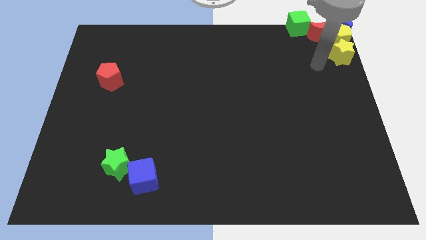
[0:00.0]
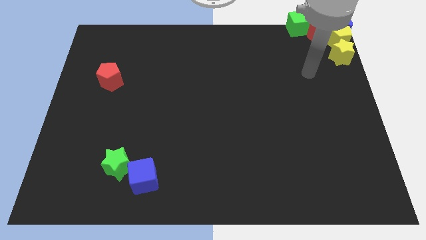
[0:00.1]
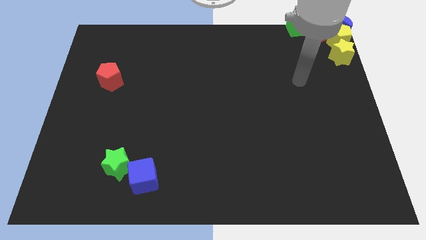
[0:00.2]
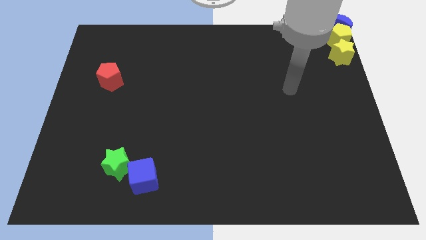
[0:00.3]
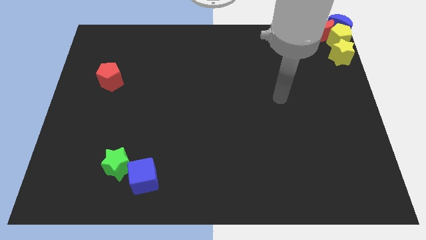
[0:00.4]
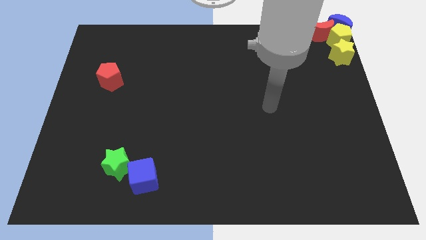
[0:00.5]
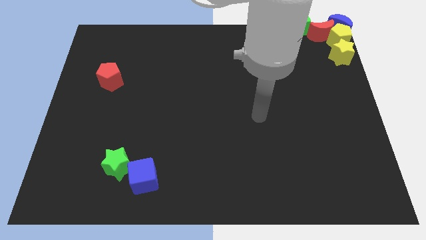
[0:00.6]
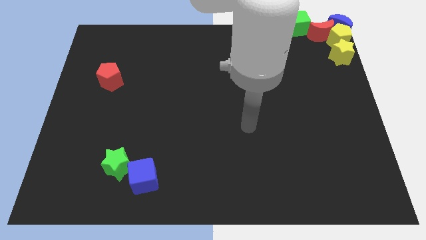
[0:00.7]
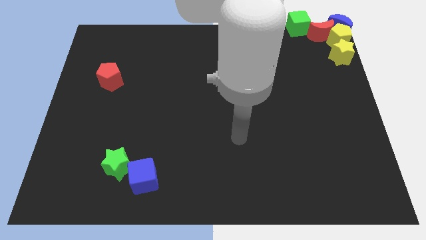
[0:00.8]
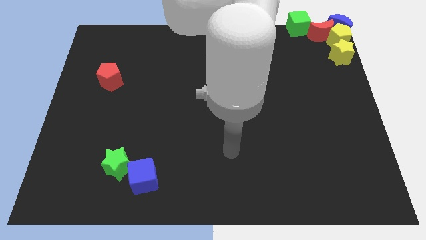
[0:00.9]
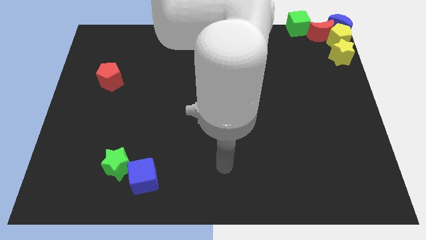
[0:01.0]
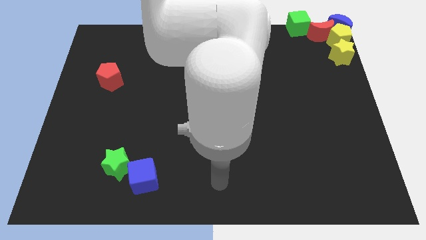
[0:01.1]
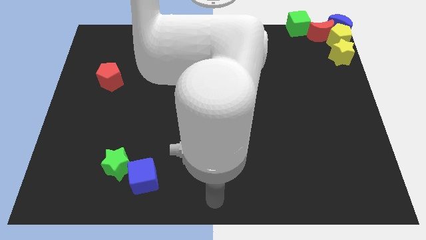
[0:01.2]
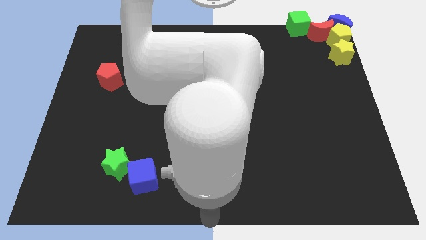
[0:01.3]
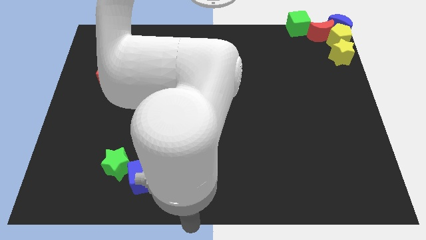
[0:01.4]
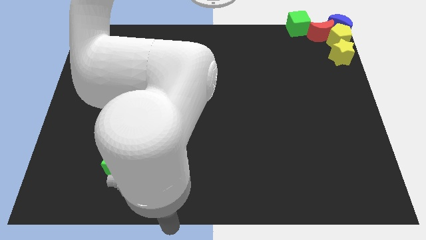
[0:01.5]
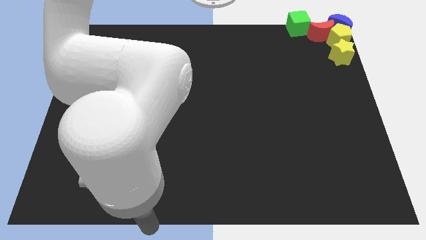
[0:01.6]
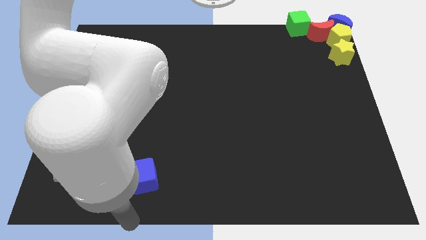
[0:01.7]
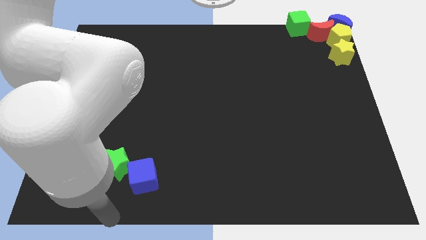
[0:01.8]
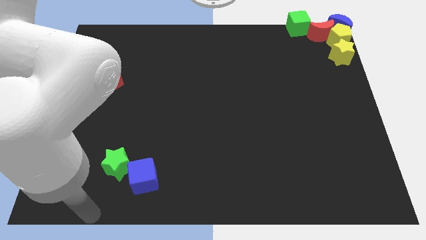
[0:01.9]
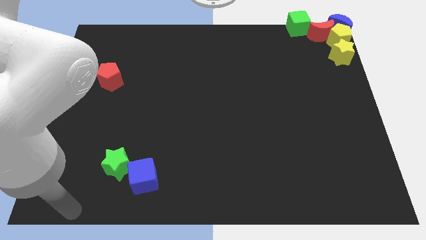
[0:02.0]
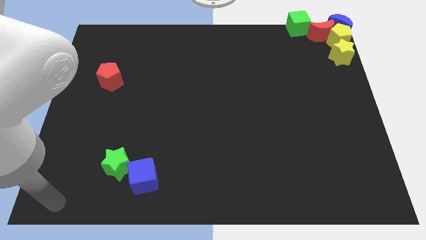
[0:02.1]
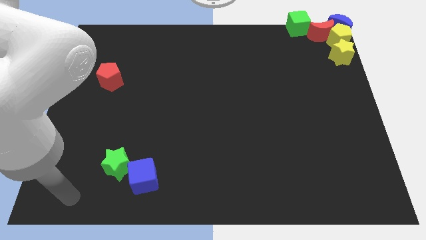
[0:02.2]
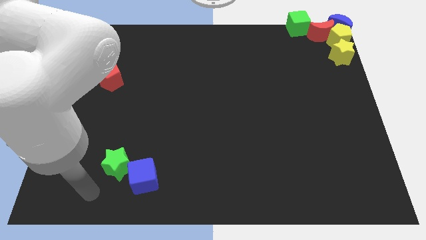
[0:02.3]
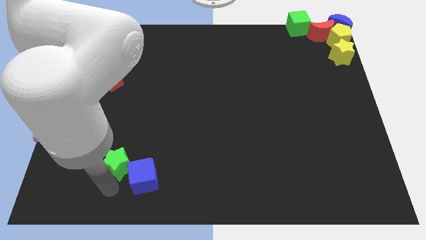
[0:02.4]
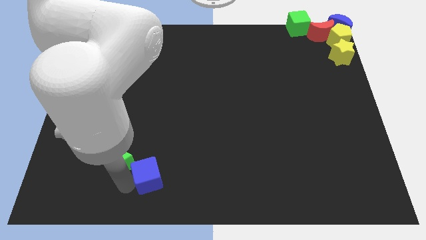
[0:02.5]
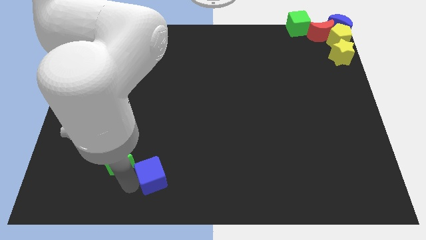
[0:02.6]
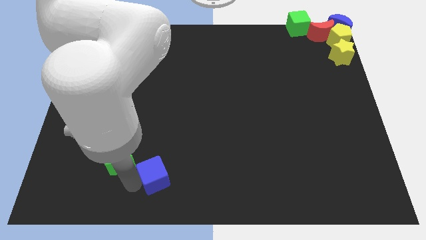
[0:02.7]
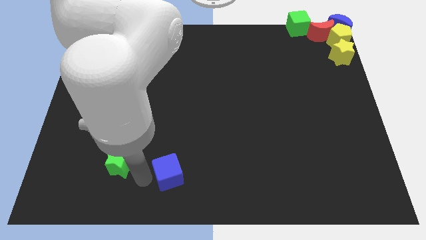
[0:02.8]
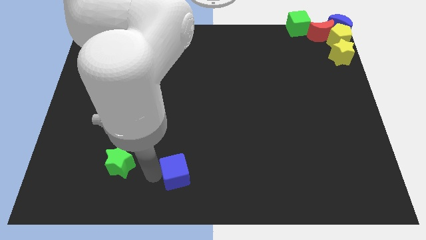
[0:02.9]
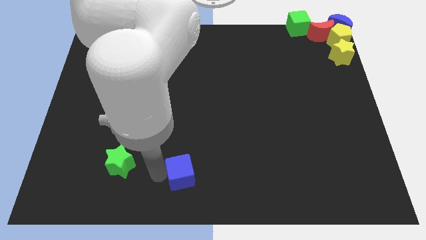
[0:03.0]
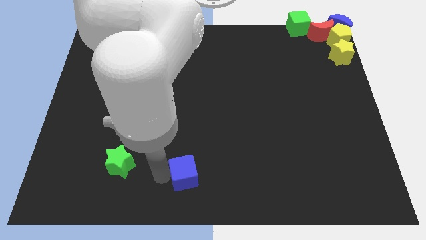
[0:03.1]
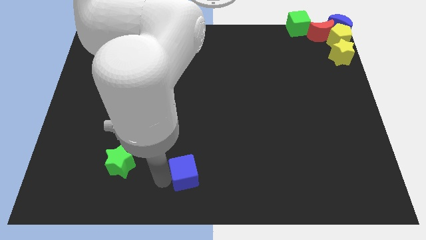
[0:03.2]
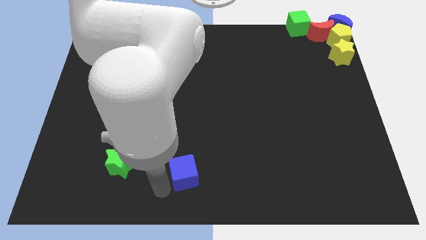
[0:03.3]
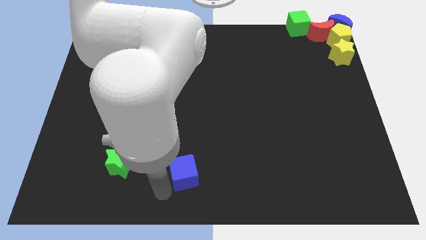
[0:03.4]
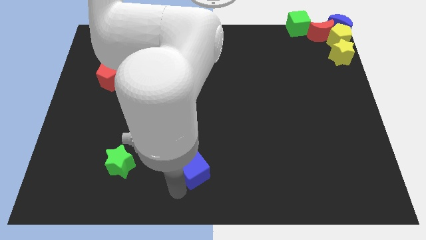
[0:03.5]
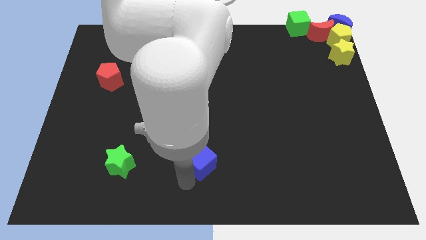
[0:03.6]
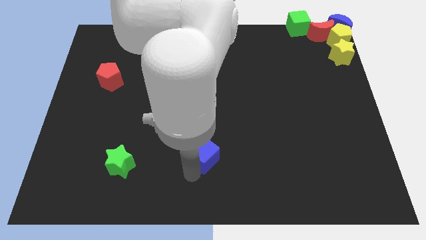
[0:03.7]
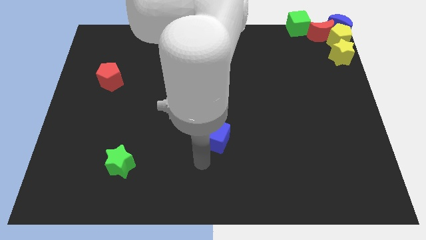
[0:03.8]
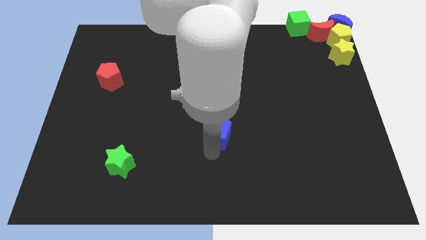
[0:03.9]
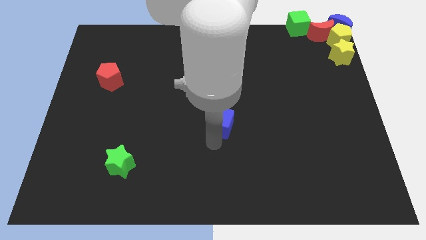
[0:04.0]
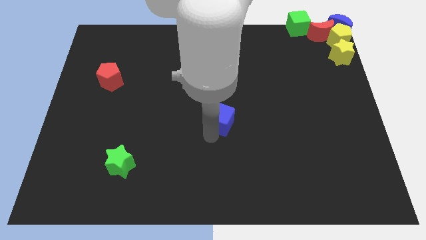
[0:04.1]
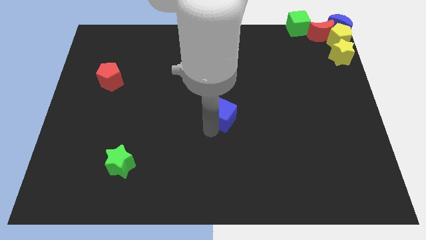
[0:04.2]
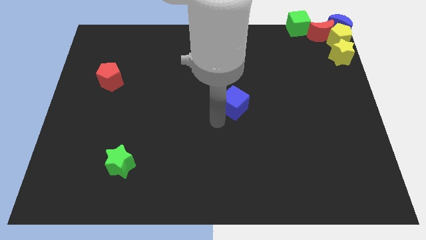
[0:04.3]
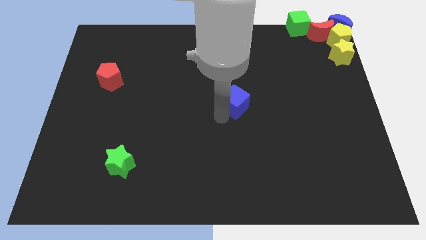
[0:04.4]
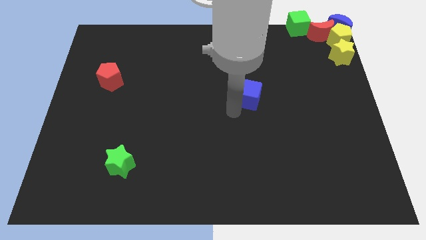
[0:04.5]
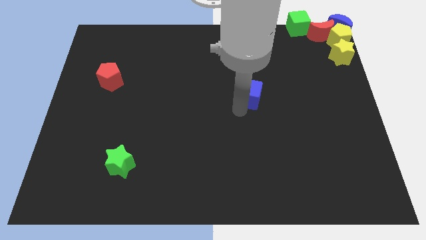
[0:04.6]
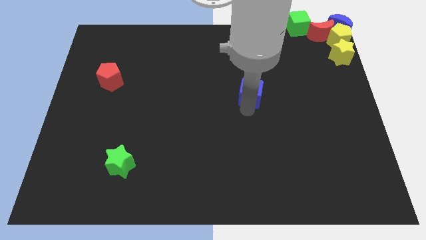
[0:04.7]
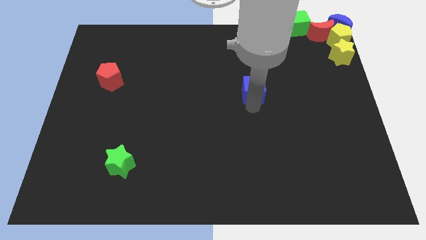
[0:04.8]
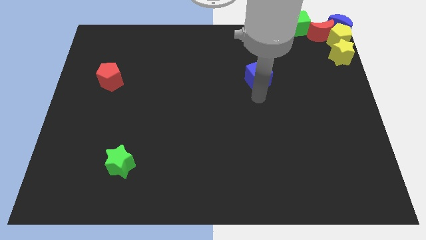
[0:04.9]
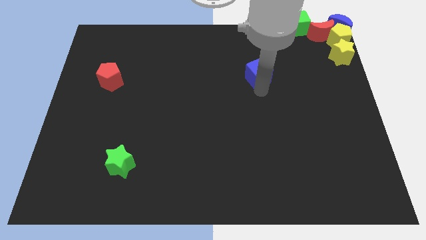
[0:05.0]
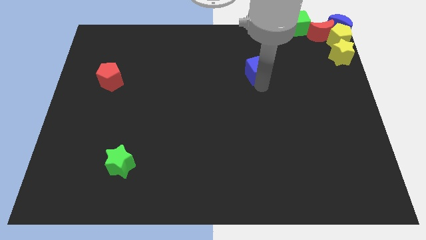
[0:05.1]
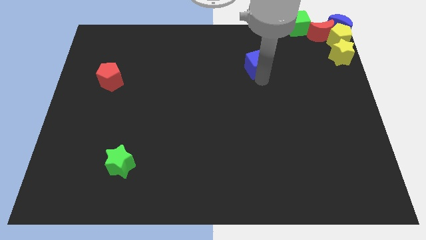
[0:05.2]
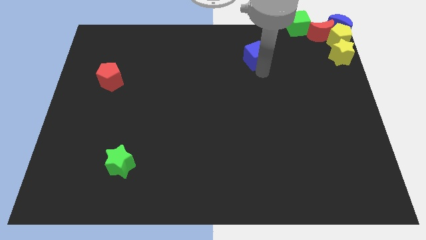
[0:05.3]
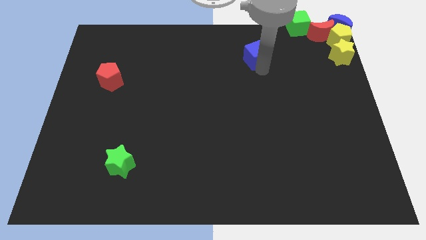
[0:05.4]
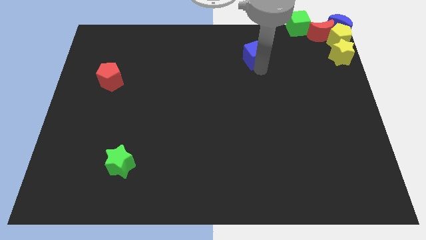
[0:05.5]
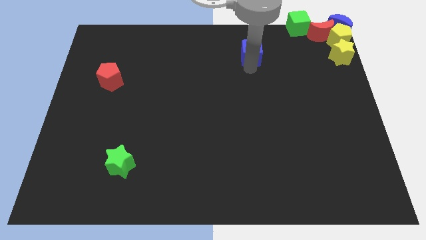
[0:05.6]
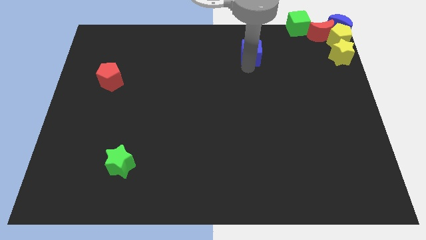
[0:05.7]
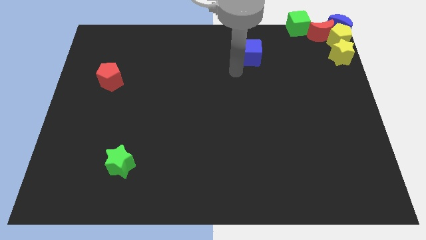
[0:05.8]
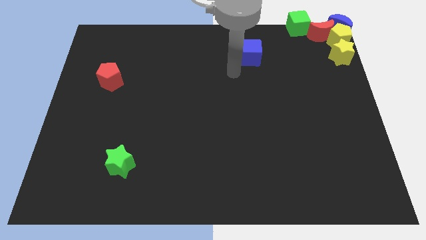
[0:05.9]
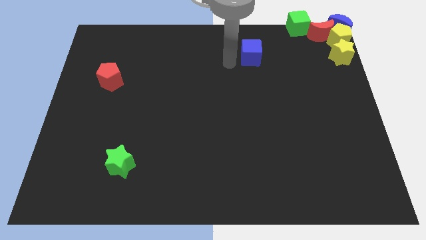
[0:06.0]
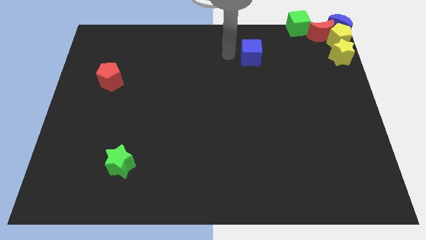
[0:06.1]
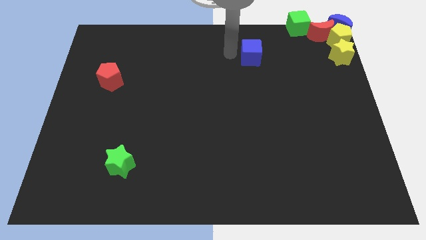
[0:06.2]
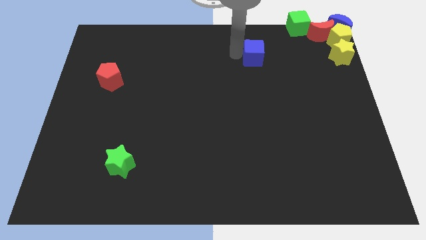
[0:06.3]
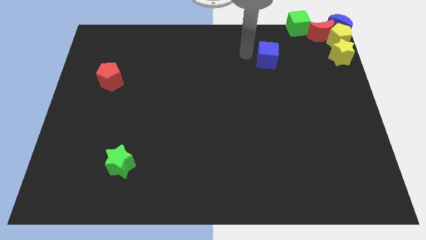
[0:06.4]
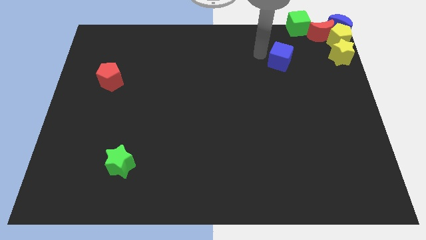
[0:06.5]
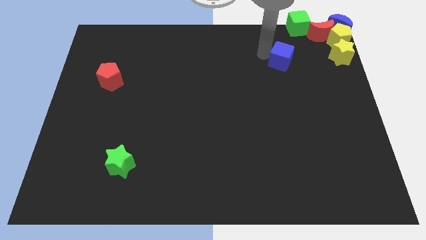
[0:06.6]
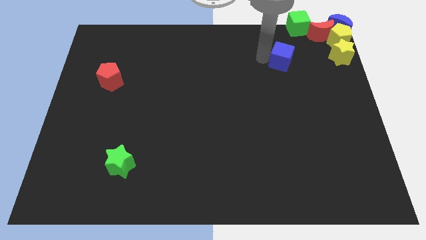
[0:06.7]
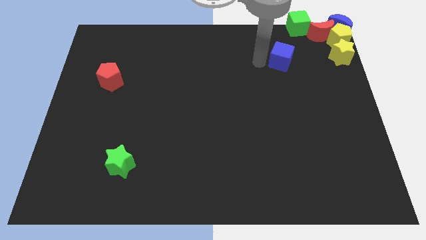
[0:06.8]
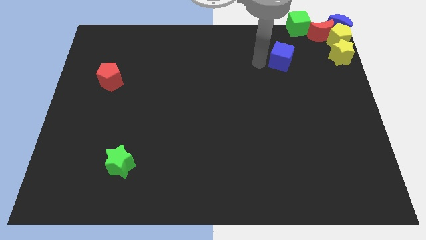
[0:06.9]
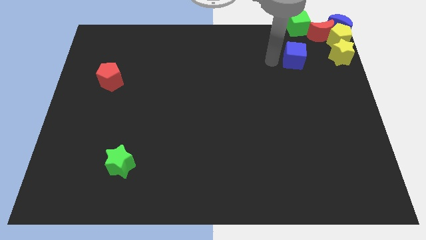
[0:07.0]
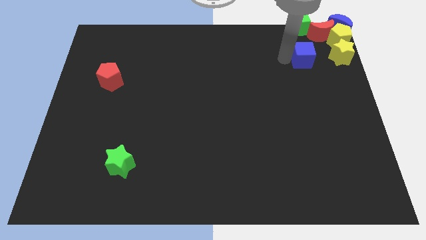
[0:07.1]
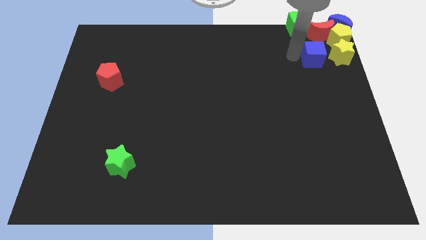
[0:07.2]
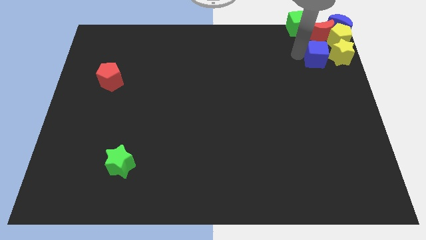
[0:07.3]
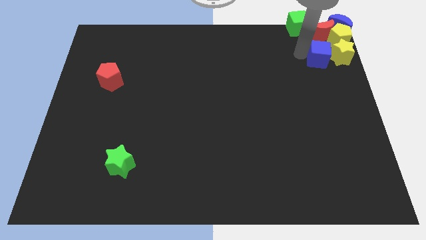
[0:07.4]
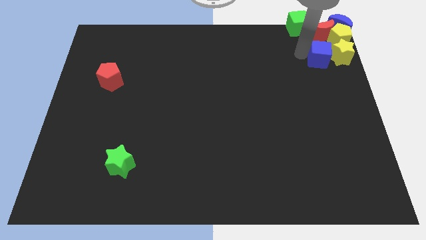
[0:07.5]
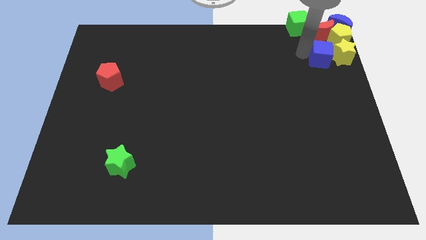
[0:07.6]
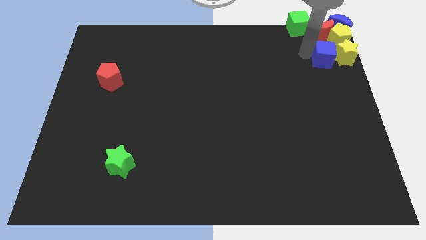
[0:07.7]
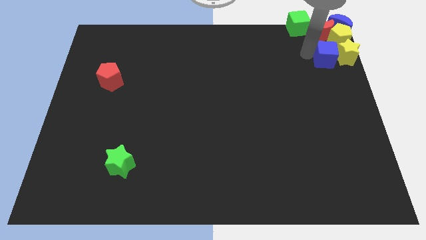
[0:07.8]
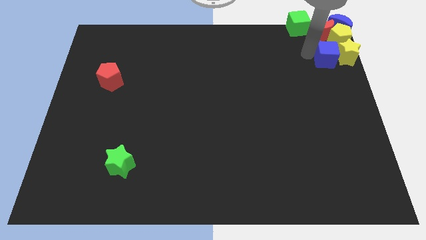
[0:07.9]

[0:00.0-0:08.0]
place the blue cube to the left of yellow star

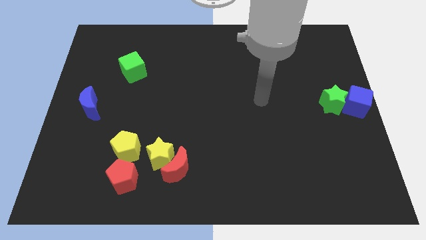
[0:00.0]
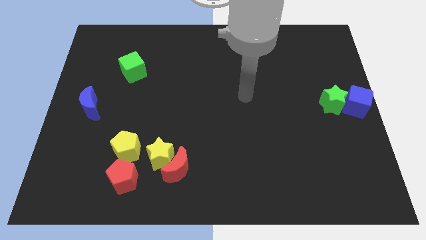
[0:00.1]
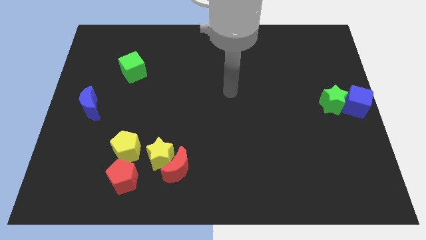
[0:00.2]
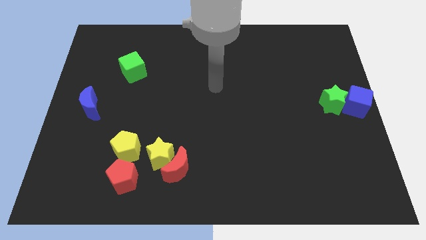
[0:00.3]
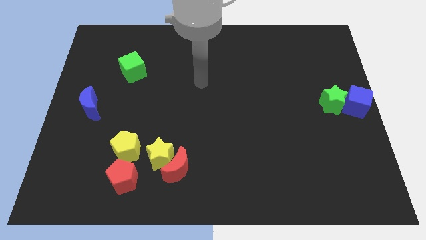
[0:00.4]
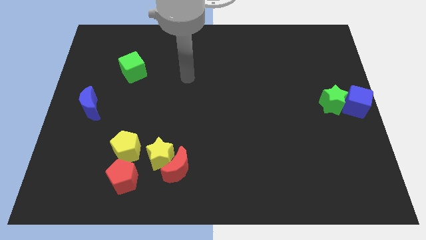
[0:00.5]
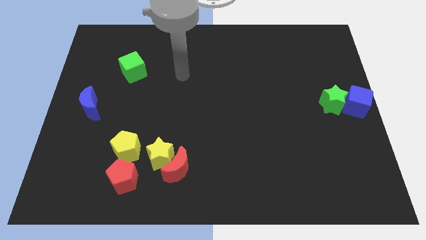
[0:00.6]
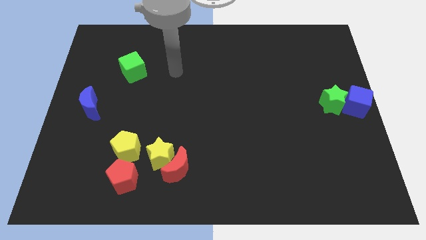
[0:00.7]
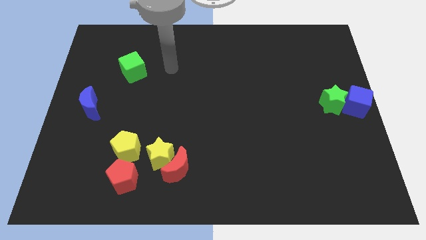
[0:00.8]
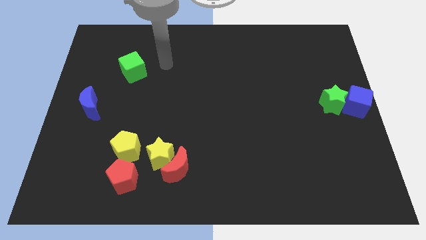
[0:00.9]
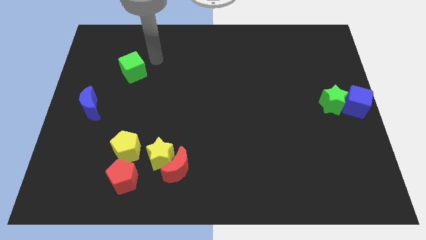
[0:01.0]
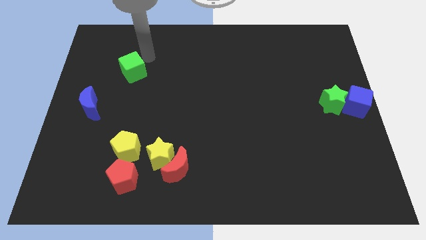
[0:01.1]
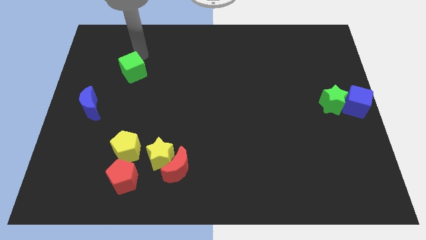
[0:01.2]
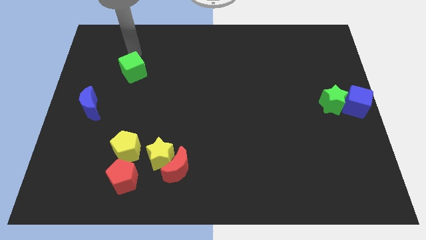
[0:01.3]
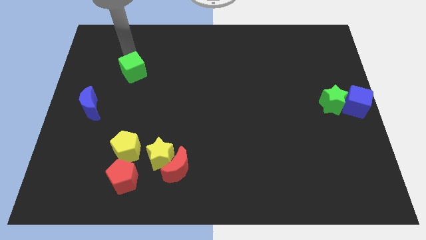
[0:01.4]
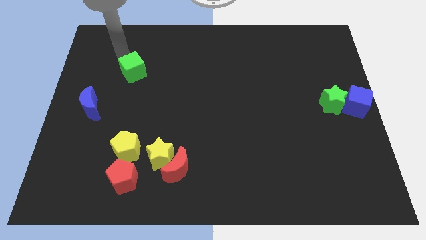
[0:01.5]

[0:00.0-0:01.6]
move away from the green star
